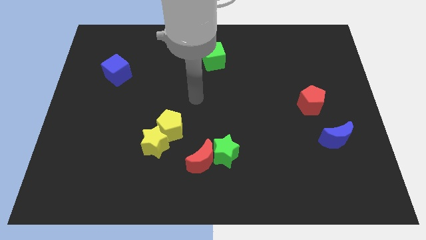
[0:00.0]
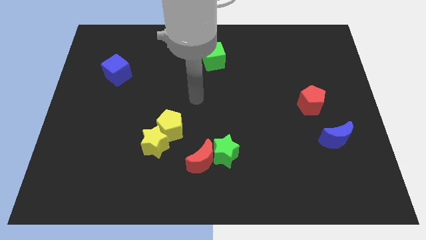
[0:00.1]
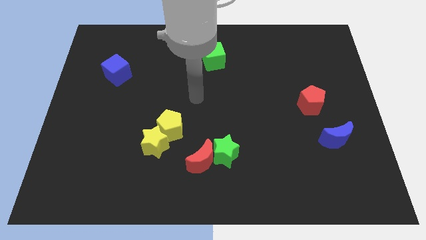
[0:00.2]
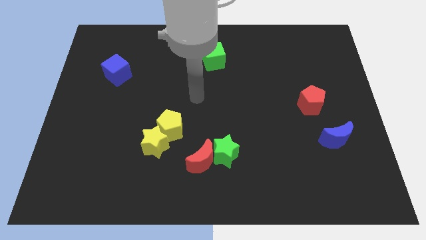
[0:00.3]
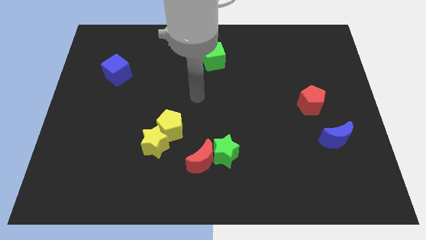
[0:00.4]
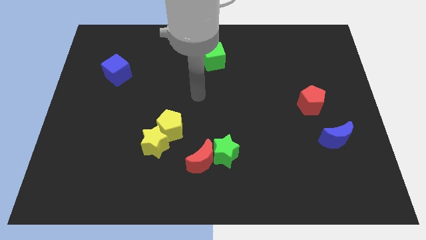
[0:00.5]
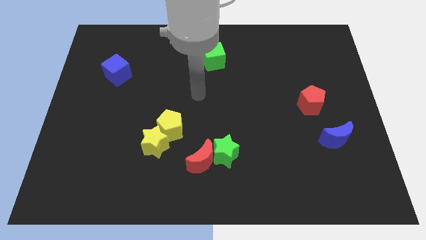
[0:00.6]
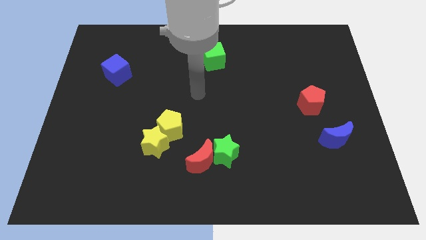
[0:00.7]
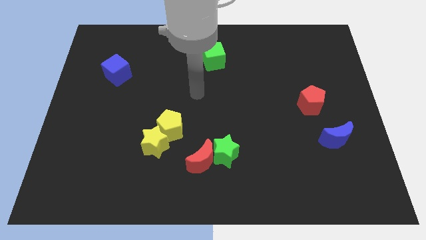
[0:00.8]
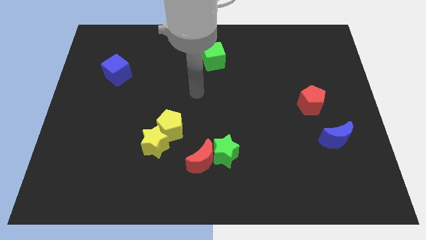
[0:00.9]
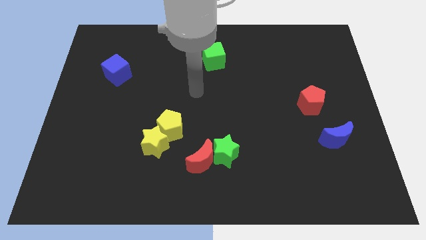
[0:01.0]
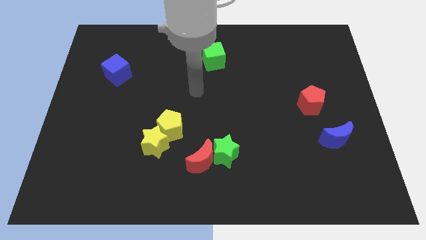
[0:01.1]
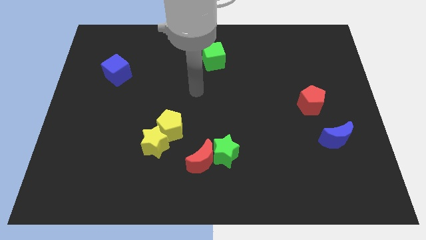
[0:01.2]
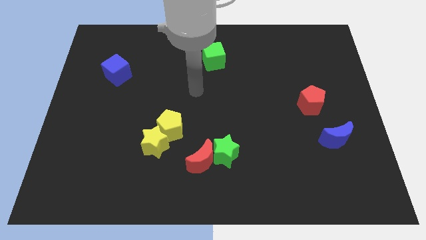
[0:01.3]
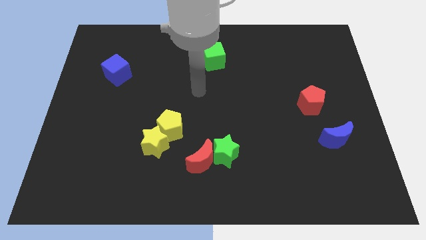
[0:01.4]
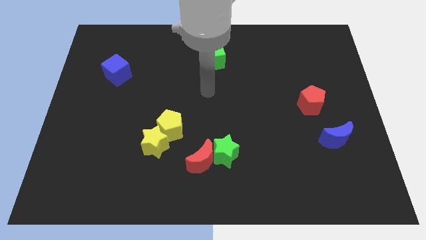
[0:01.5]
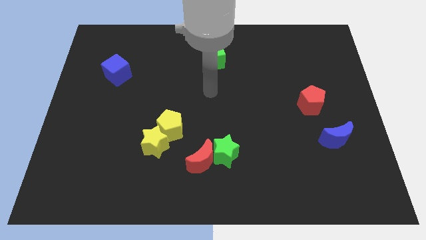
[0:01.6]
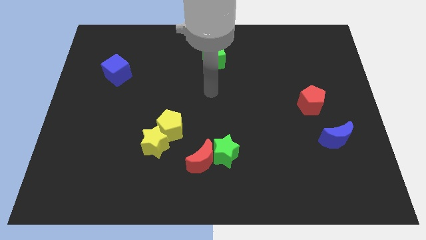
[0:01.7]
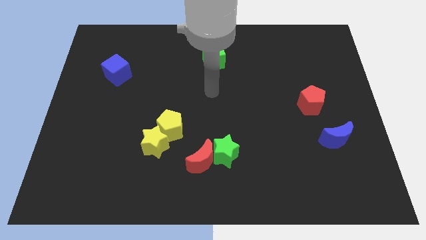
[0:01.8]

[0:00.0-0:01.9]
move your arm to the bottom side of the green cube

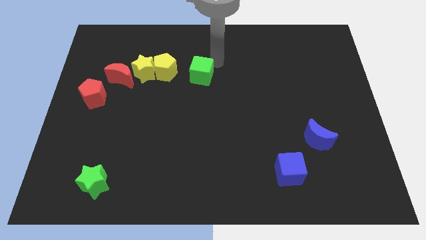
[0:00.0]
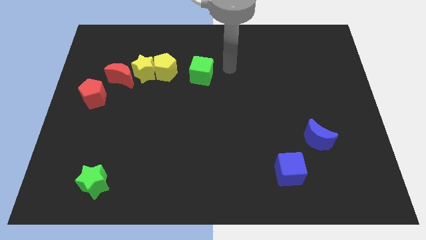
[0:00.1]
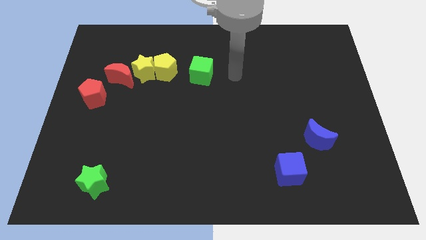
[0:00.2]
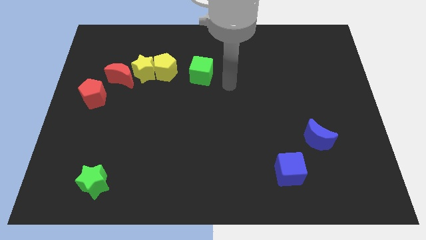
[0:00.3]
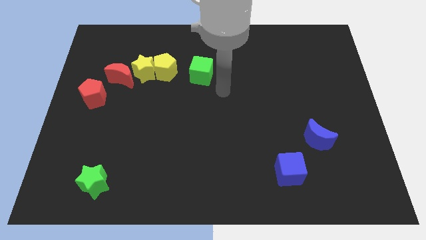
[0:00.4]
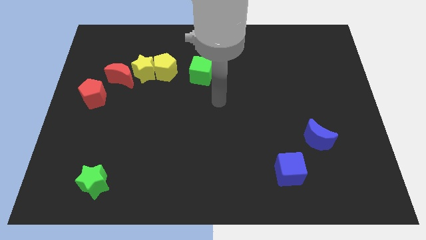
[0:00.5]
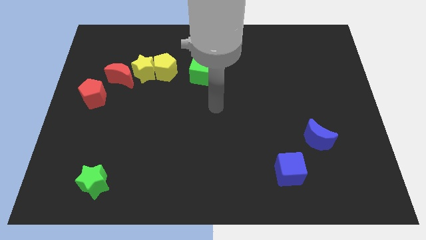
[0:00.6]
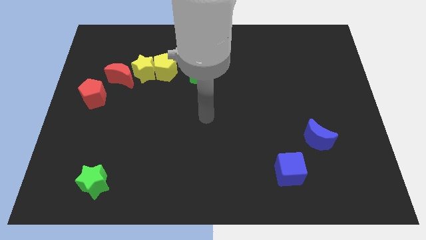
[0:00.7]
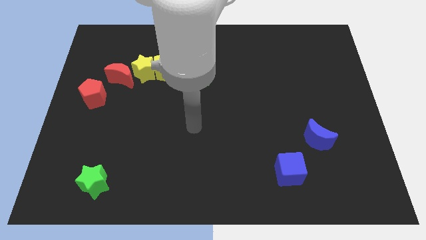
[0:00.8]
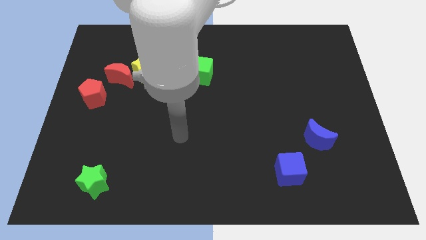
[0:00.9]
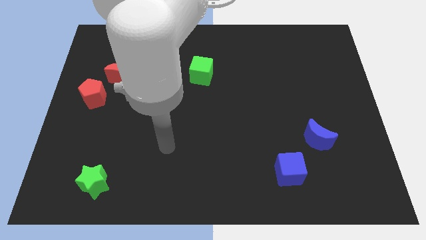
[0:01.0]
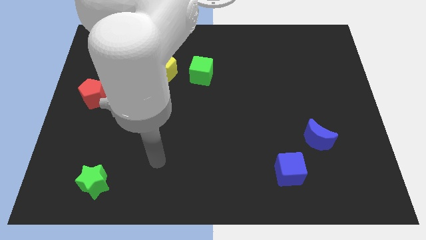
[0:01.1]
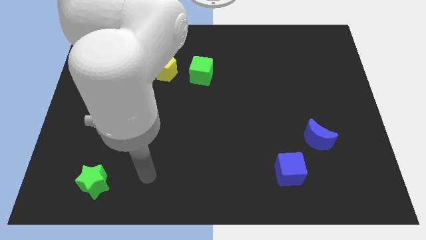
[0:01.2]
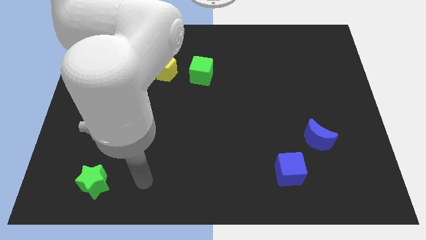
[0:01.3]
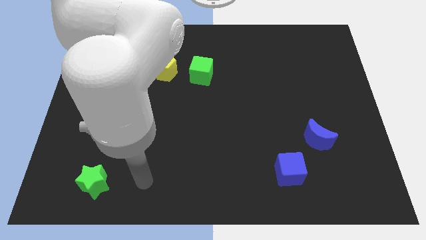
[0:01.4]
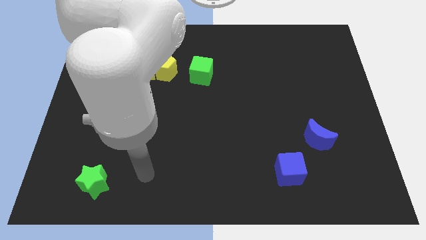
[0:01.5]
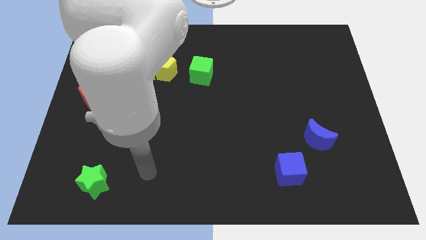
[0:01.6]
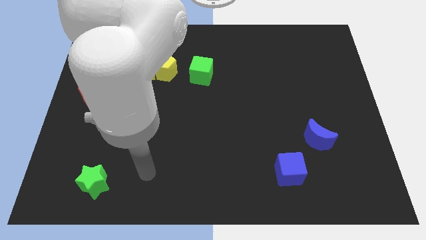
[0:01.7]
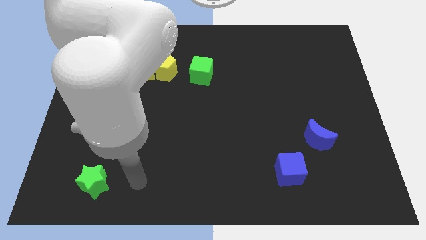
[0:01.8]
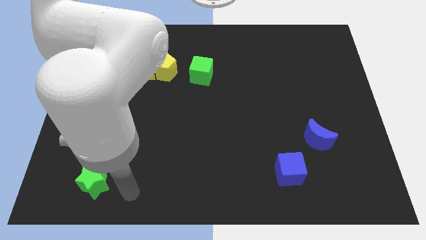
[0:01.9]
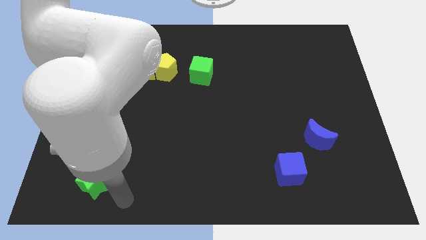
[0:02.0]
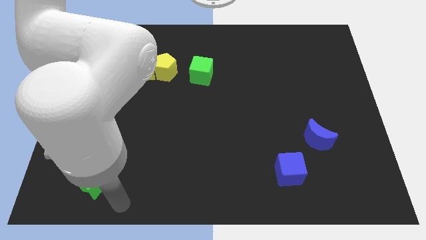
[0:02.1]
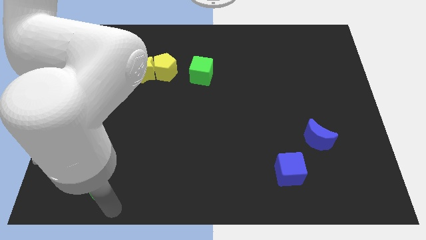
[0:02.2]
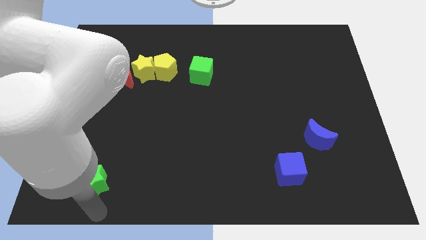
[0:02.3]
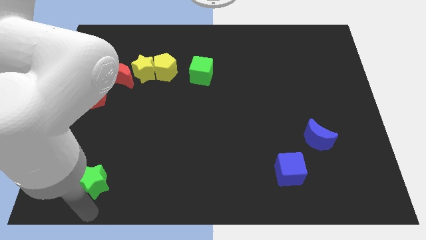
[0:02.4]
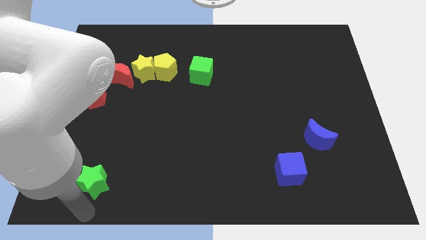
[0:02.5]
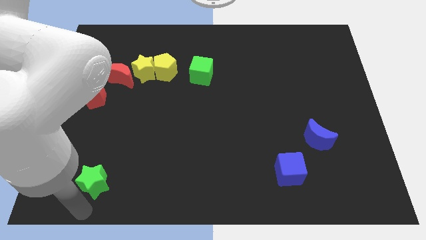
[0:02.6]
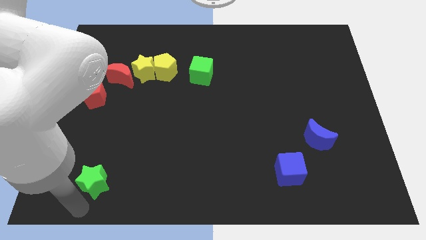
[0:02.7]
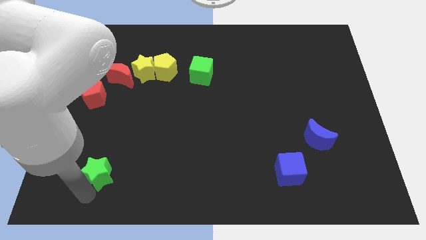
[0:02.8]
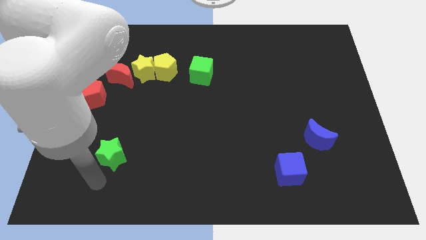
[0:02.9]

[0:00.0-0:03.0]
point your arm at the bottom left of the green star

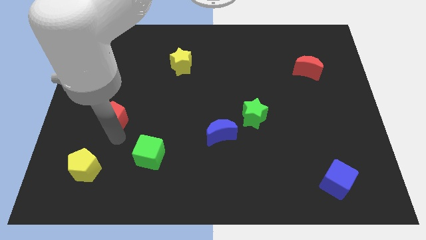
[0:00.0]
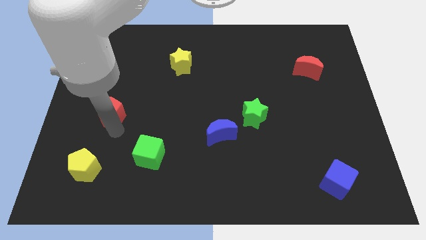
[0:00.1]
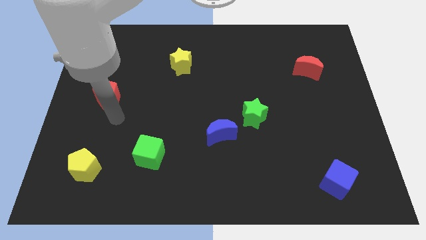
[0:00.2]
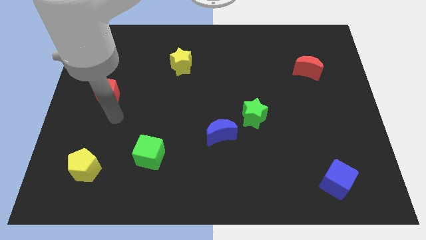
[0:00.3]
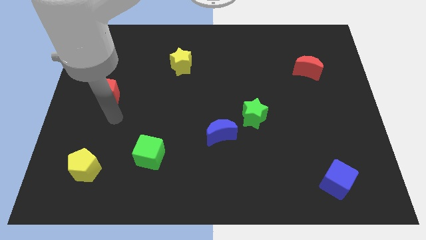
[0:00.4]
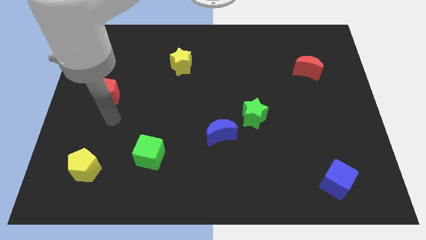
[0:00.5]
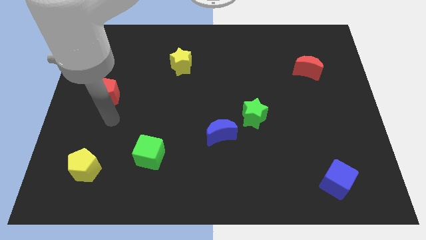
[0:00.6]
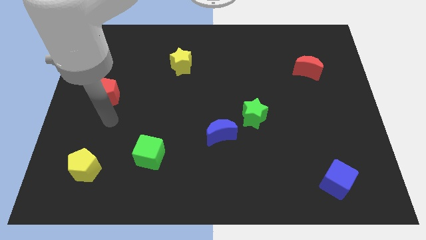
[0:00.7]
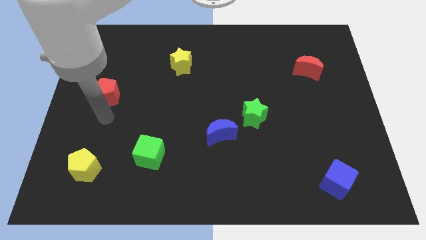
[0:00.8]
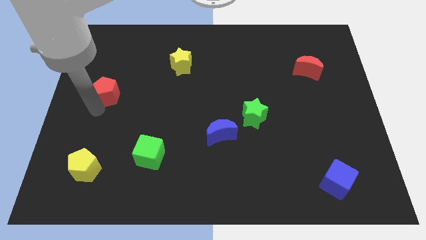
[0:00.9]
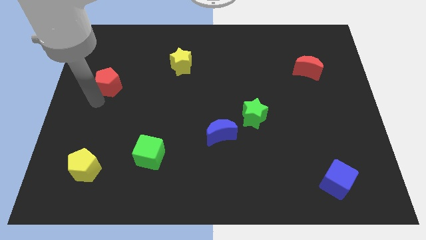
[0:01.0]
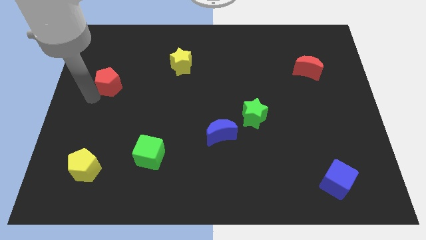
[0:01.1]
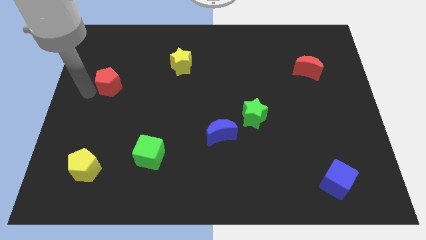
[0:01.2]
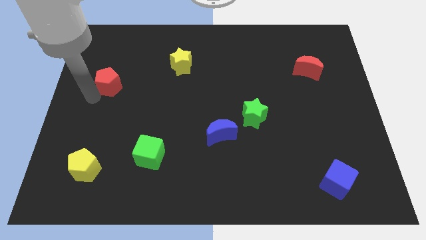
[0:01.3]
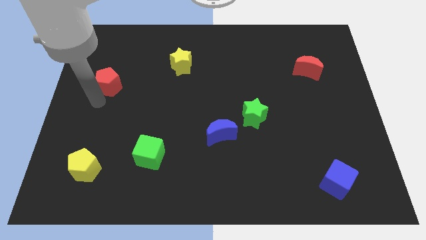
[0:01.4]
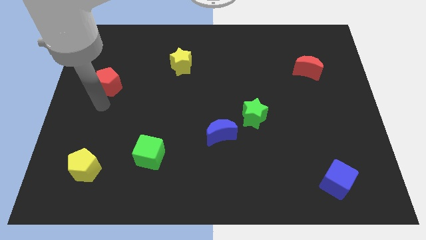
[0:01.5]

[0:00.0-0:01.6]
place the red pentagon diagonal to the blue moon

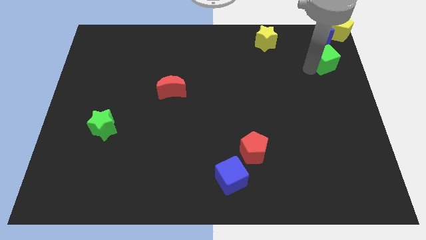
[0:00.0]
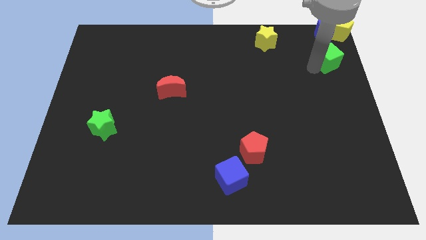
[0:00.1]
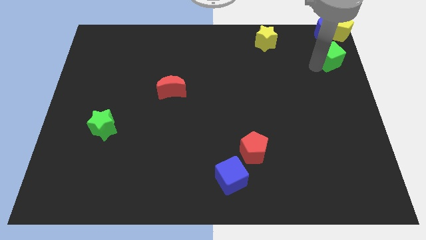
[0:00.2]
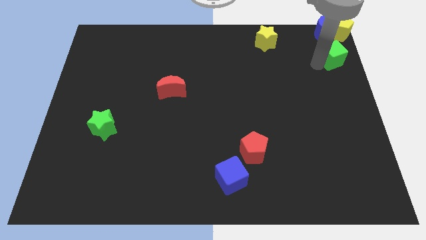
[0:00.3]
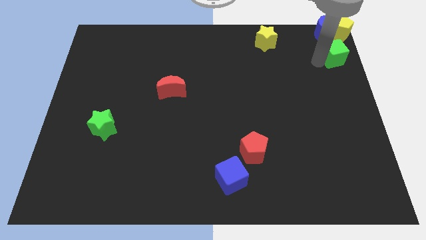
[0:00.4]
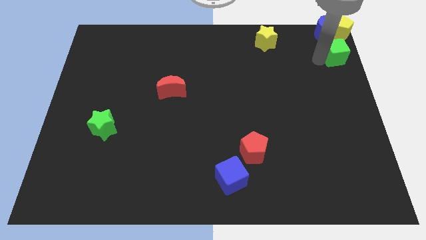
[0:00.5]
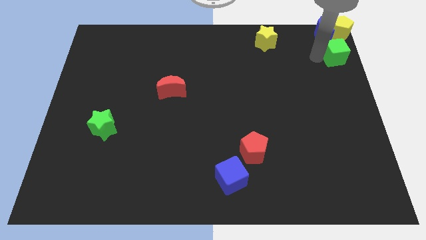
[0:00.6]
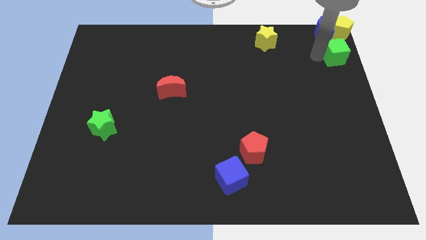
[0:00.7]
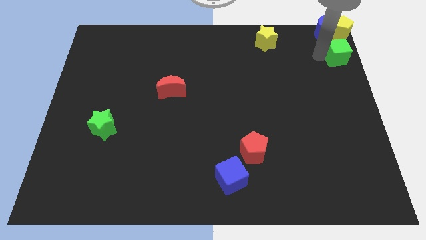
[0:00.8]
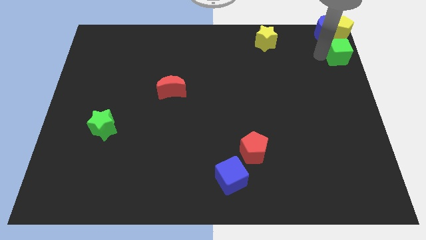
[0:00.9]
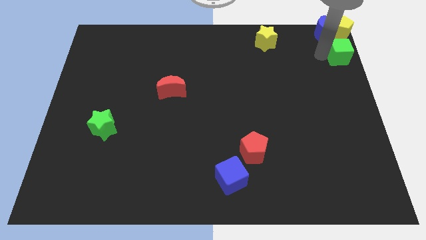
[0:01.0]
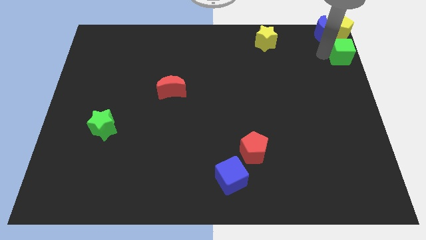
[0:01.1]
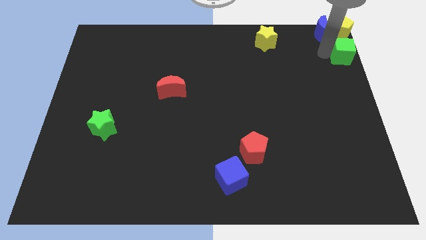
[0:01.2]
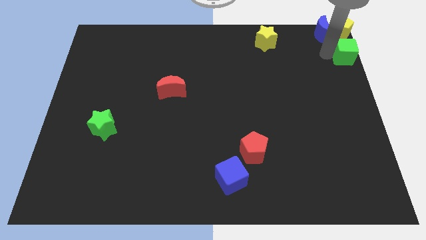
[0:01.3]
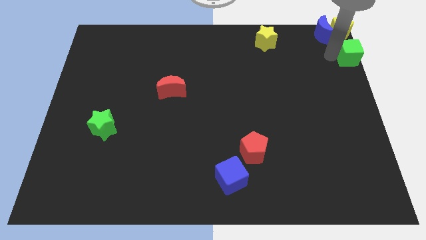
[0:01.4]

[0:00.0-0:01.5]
place green cube below yellow pentagon

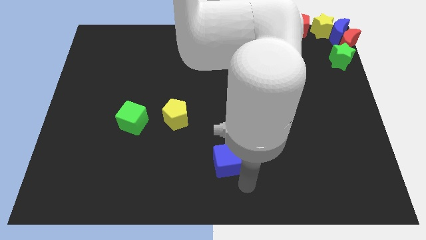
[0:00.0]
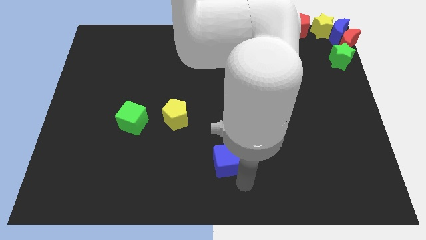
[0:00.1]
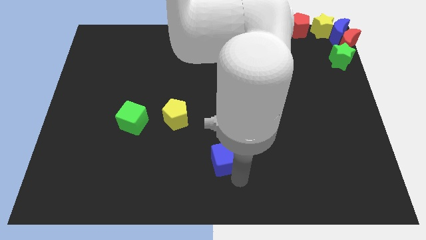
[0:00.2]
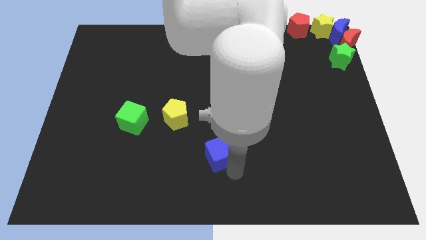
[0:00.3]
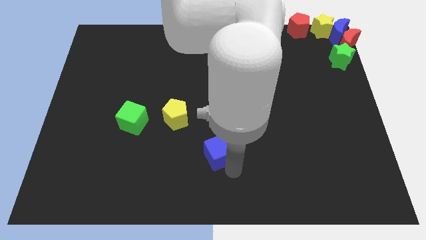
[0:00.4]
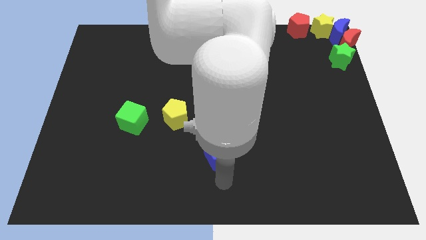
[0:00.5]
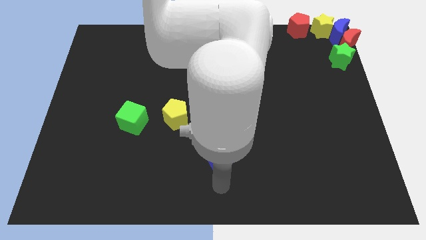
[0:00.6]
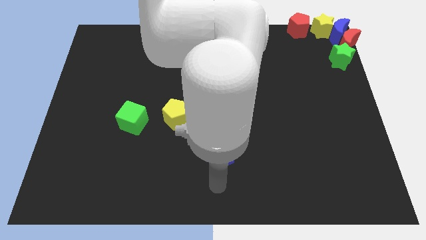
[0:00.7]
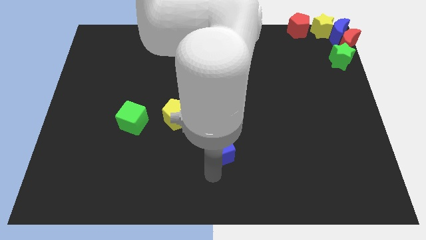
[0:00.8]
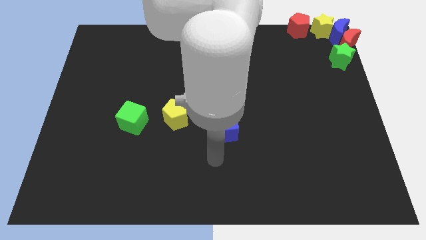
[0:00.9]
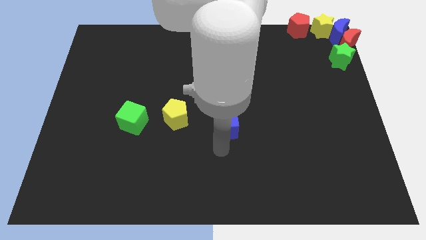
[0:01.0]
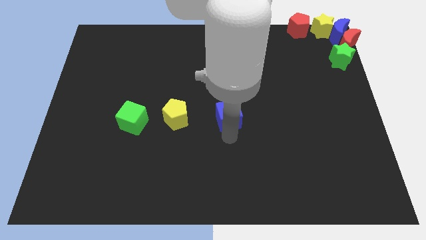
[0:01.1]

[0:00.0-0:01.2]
move the blue cube to right of the yellow pentagon
